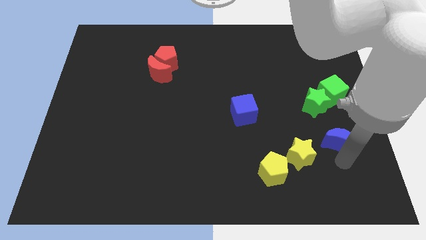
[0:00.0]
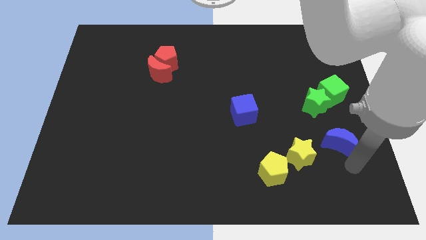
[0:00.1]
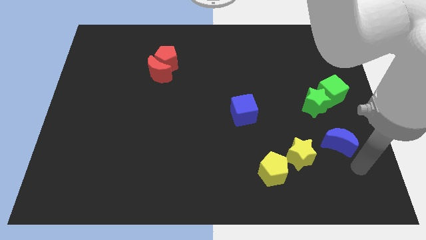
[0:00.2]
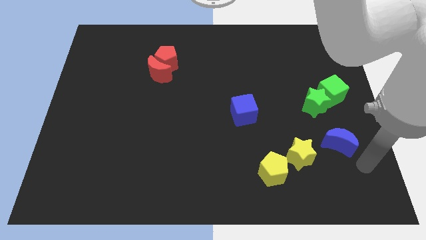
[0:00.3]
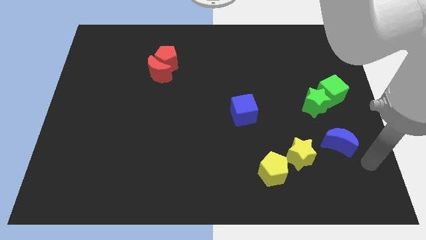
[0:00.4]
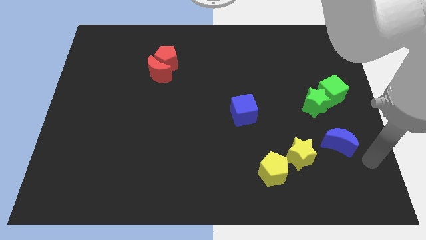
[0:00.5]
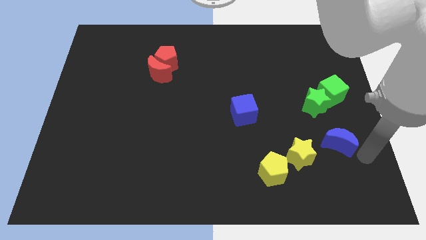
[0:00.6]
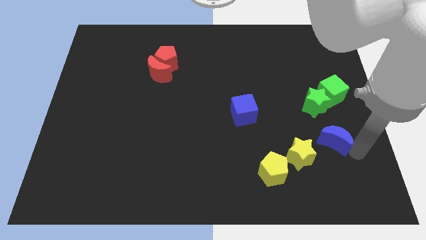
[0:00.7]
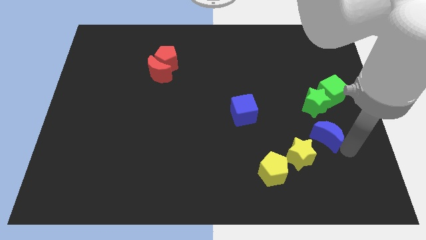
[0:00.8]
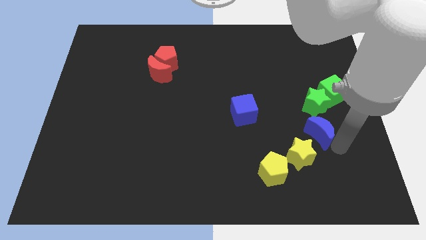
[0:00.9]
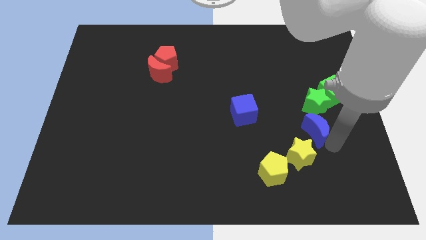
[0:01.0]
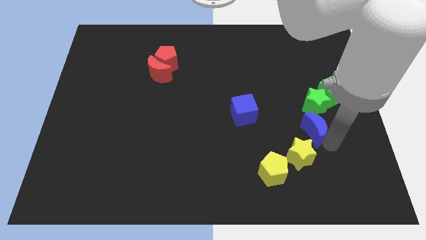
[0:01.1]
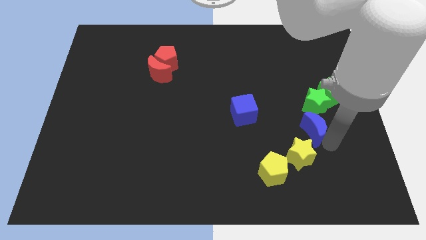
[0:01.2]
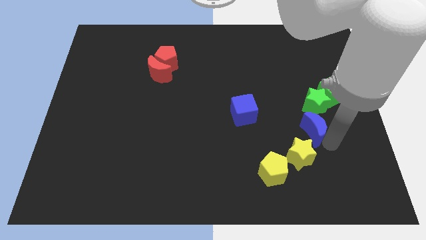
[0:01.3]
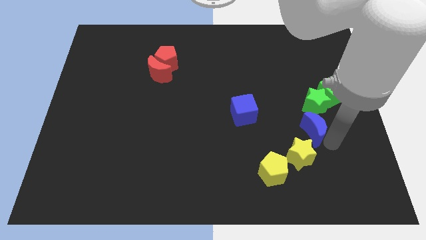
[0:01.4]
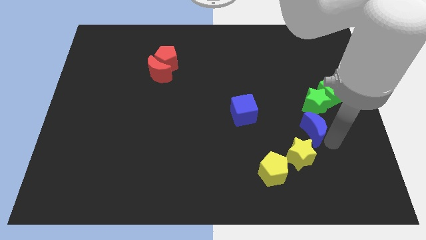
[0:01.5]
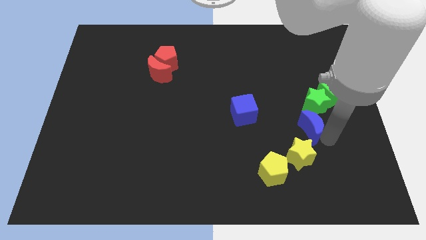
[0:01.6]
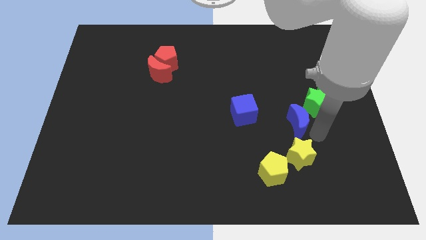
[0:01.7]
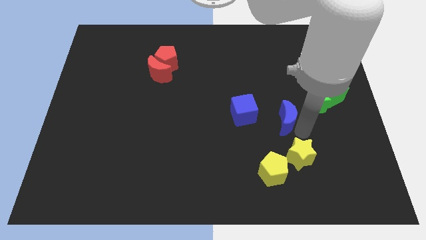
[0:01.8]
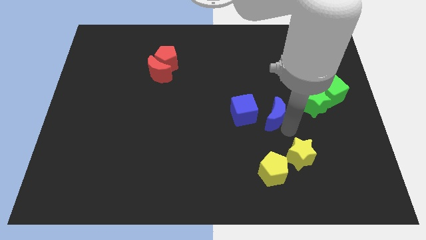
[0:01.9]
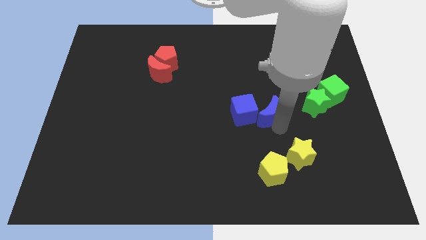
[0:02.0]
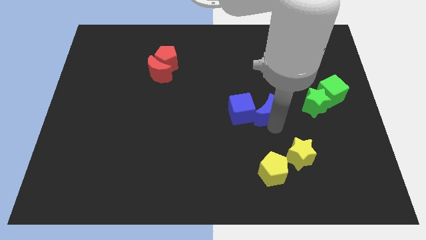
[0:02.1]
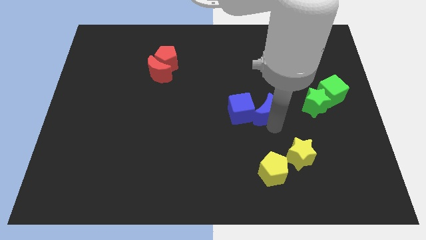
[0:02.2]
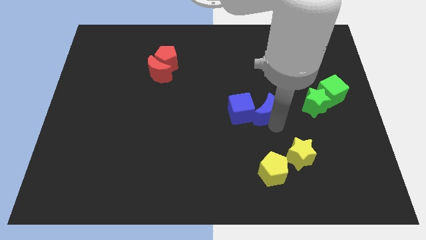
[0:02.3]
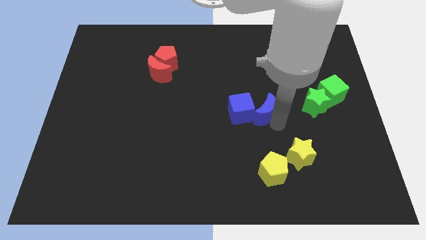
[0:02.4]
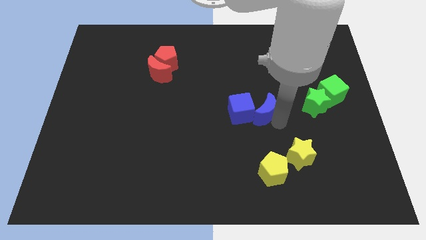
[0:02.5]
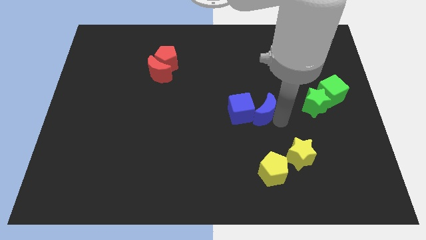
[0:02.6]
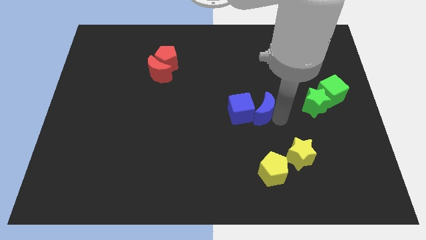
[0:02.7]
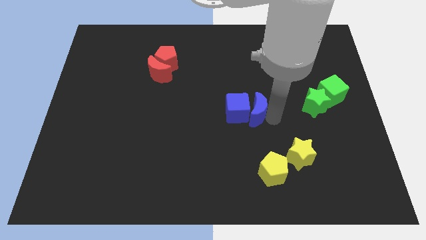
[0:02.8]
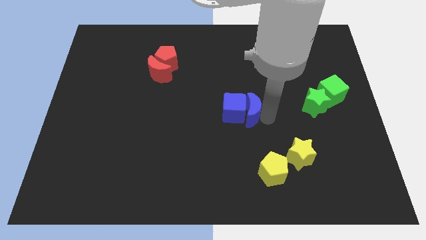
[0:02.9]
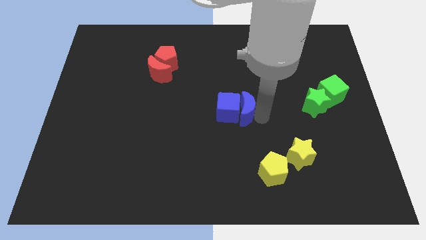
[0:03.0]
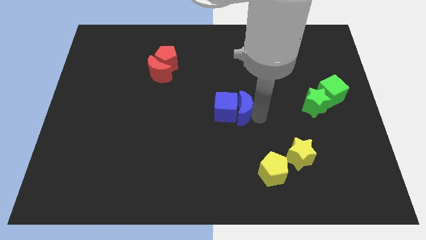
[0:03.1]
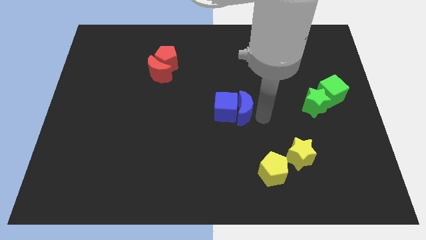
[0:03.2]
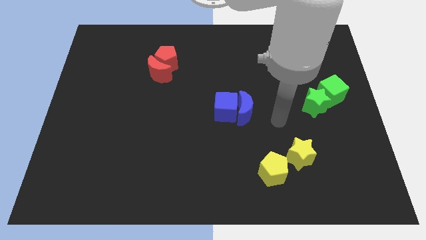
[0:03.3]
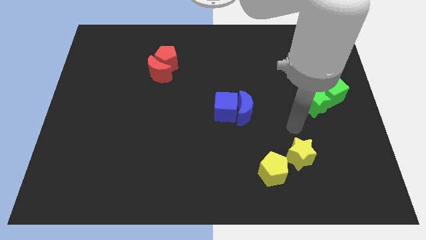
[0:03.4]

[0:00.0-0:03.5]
push the blue crescent into blue cube

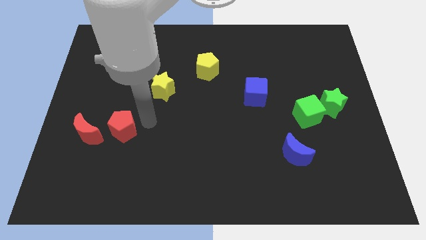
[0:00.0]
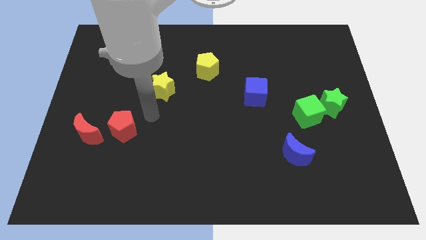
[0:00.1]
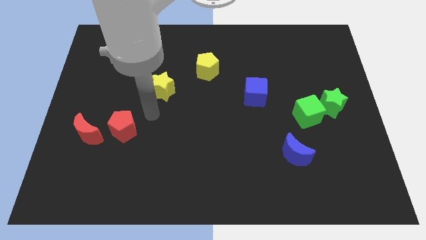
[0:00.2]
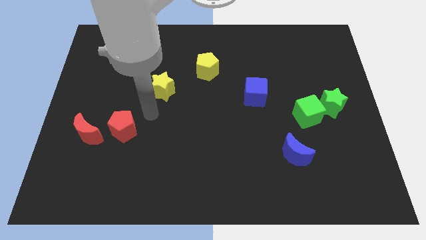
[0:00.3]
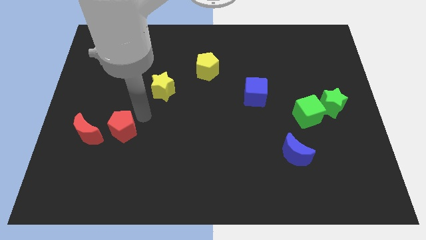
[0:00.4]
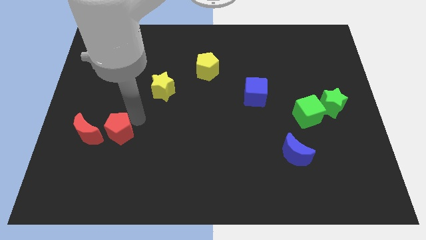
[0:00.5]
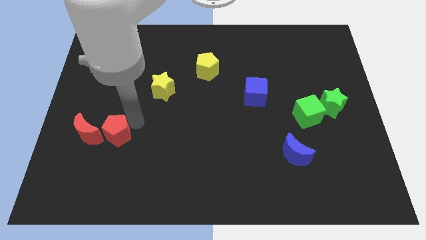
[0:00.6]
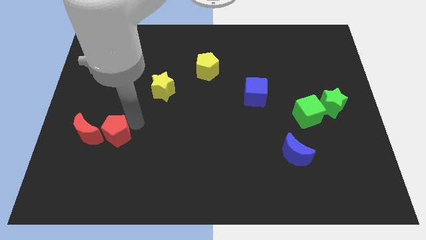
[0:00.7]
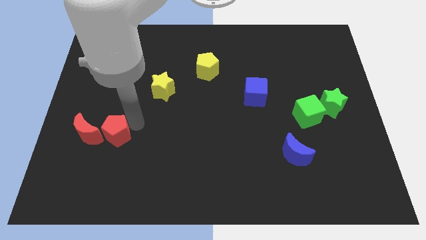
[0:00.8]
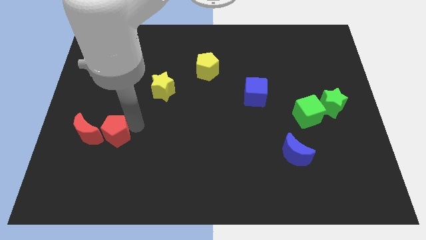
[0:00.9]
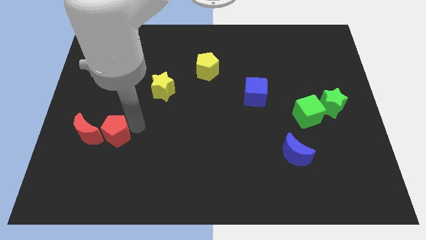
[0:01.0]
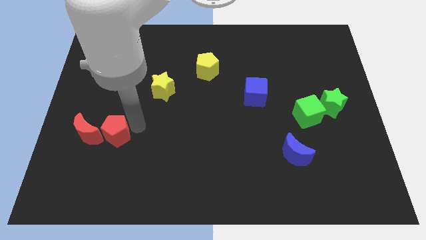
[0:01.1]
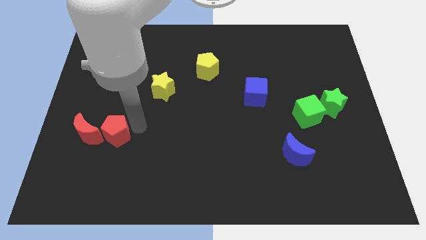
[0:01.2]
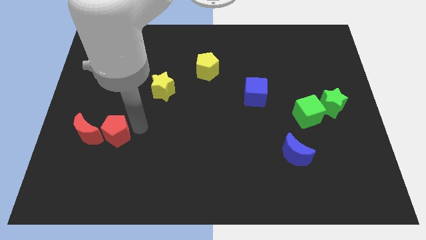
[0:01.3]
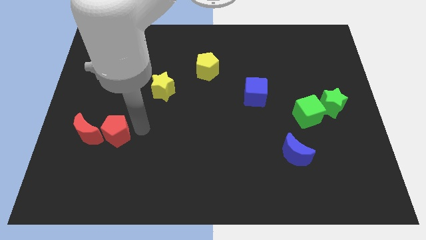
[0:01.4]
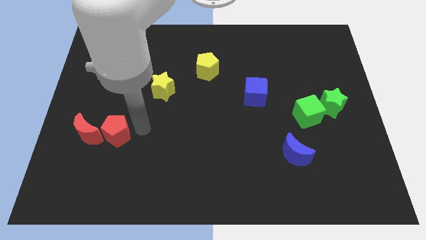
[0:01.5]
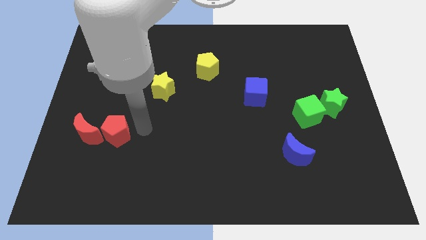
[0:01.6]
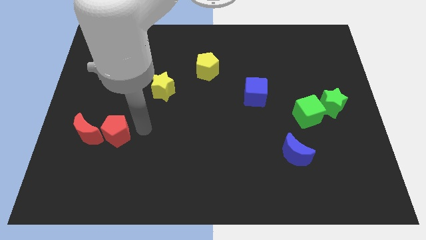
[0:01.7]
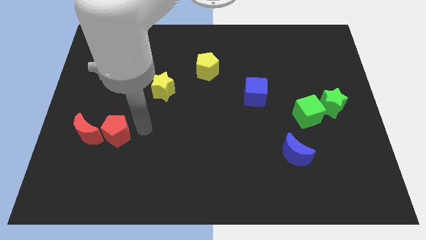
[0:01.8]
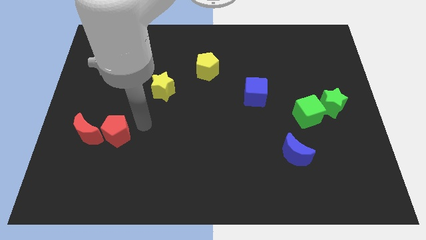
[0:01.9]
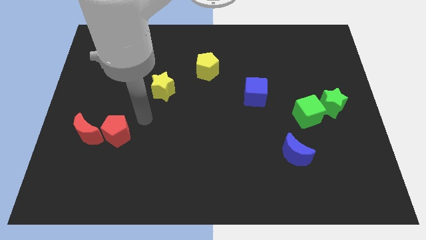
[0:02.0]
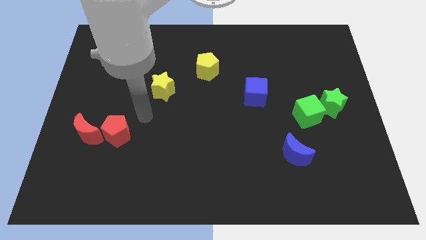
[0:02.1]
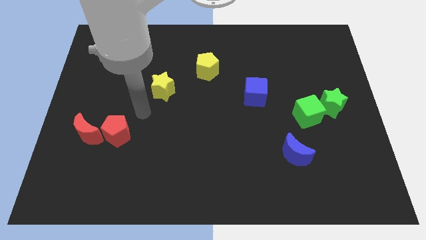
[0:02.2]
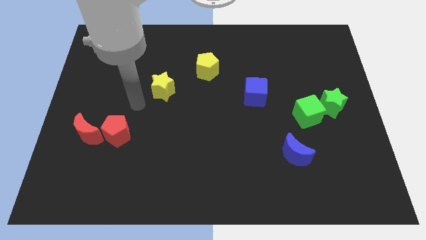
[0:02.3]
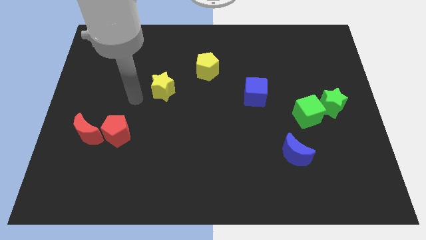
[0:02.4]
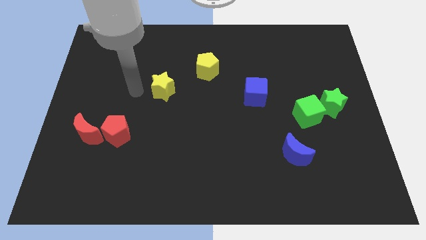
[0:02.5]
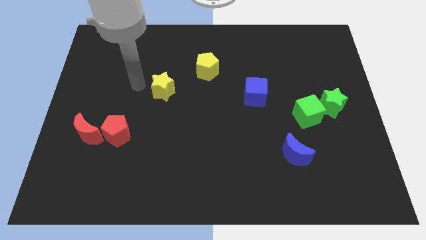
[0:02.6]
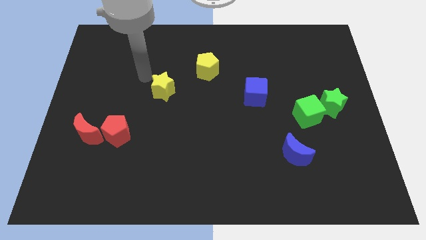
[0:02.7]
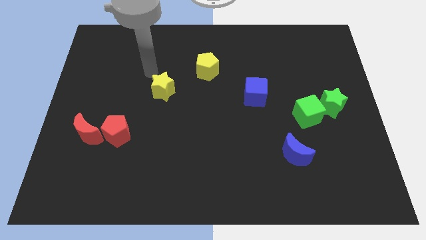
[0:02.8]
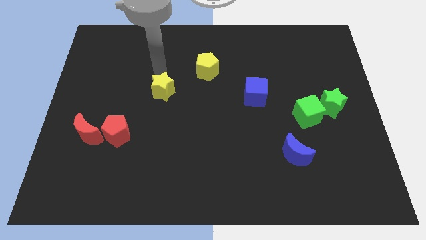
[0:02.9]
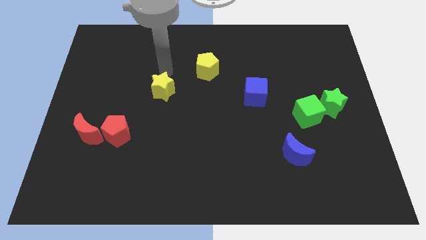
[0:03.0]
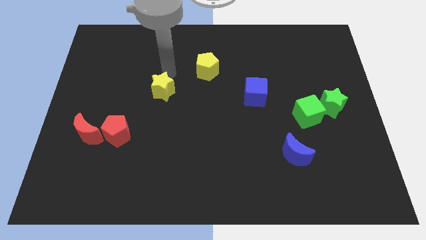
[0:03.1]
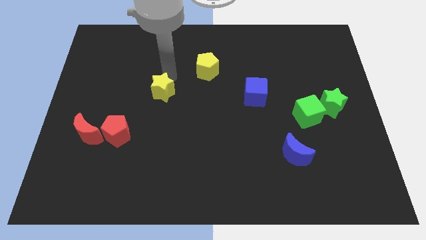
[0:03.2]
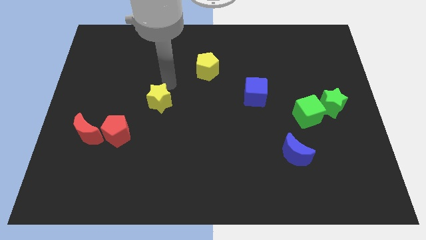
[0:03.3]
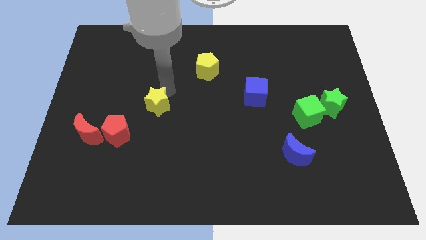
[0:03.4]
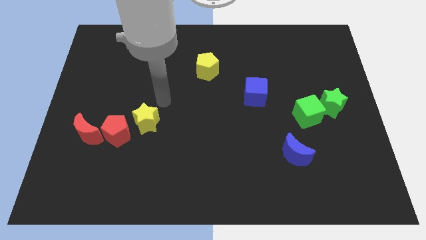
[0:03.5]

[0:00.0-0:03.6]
push the yellow star towards the red pentagon

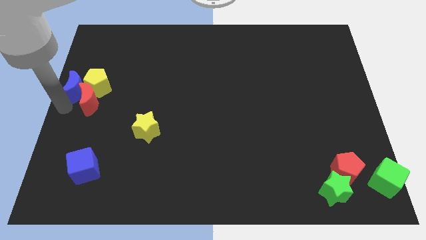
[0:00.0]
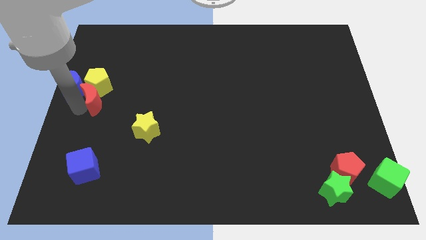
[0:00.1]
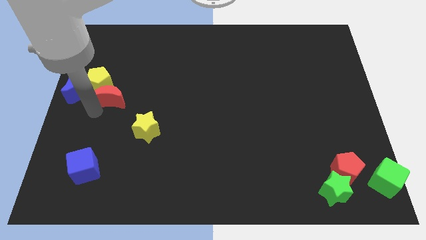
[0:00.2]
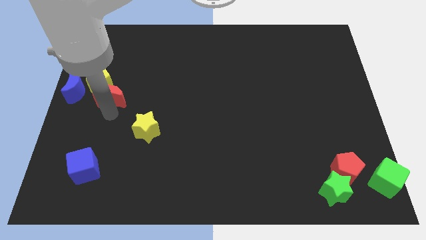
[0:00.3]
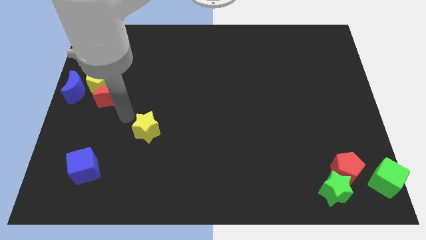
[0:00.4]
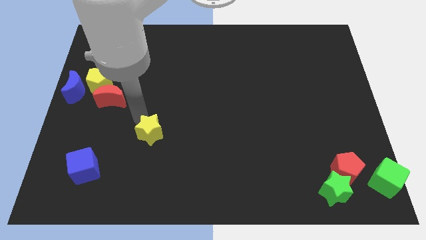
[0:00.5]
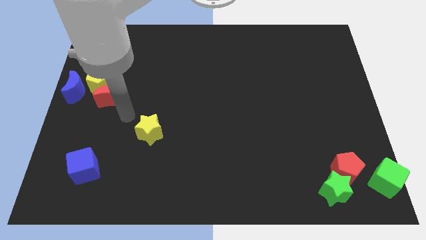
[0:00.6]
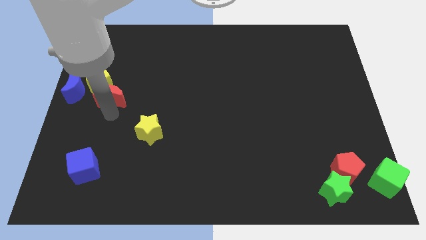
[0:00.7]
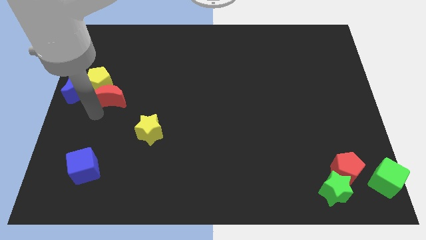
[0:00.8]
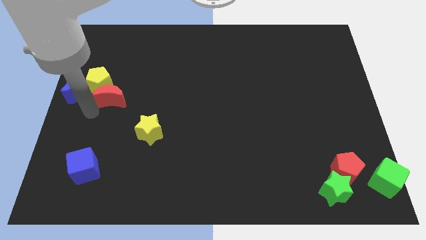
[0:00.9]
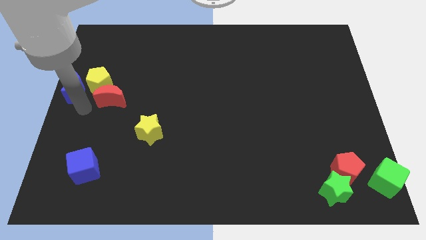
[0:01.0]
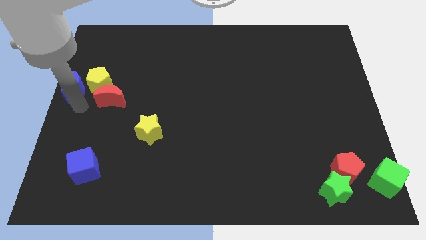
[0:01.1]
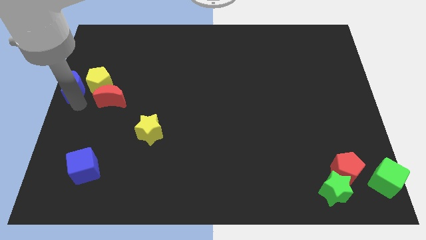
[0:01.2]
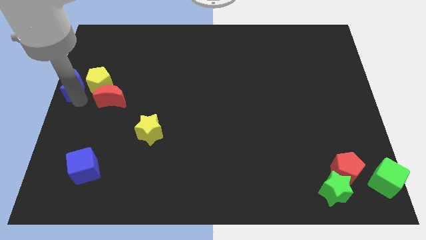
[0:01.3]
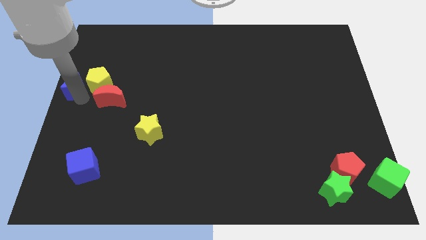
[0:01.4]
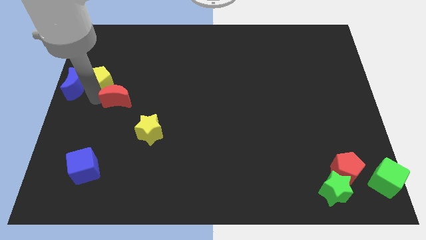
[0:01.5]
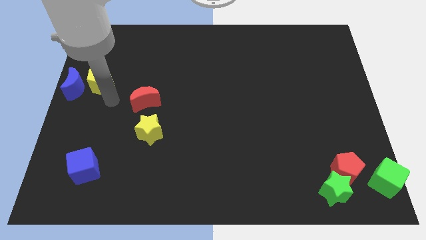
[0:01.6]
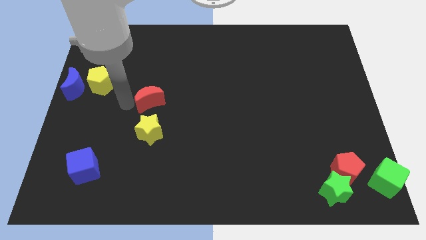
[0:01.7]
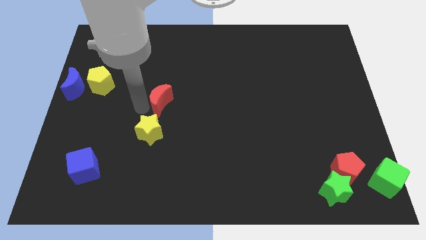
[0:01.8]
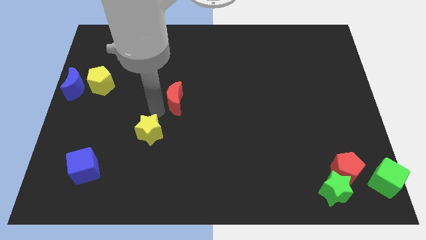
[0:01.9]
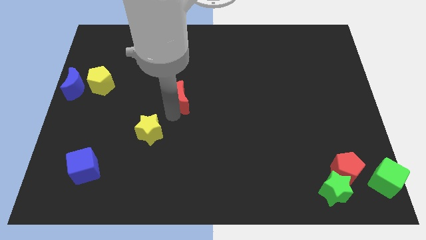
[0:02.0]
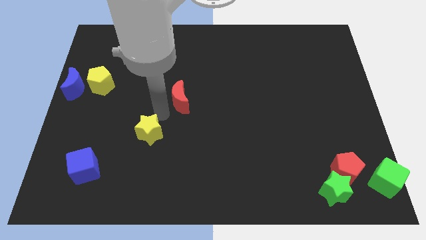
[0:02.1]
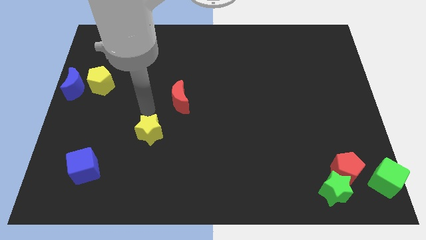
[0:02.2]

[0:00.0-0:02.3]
place the red moon above the yellow star
